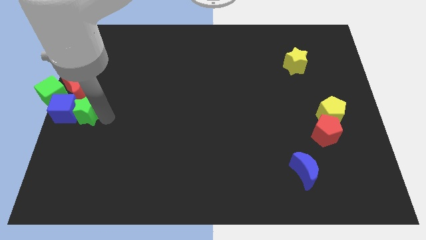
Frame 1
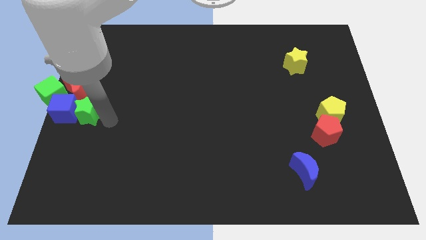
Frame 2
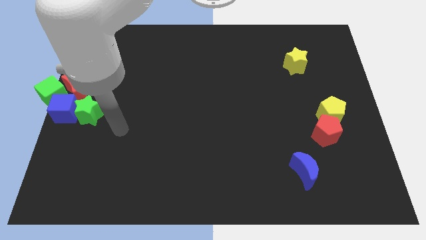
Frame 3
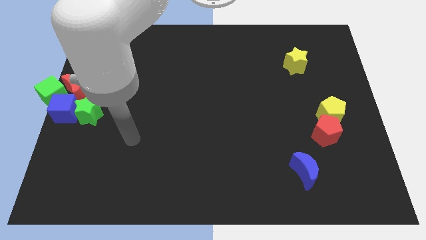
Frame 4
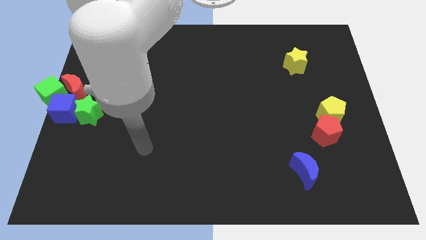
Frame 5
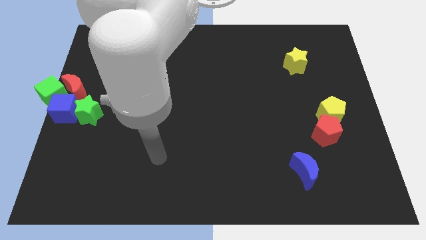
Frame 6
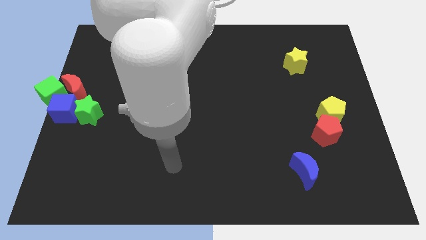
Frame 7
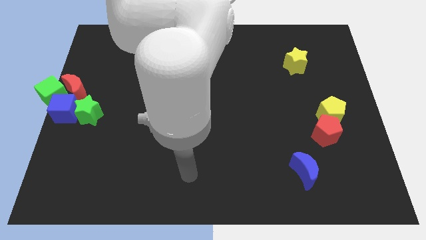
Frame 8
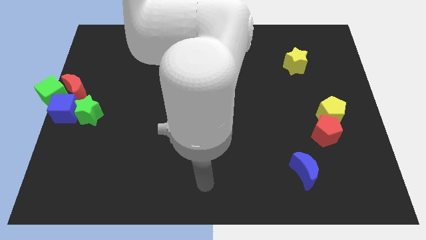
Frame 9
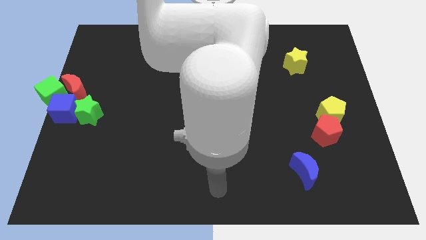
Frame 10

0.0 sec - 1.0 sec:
place the arm to the bottom middle of the board

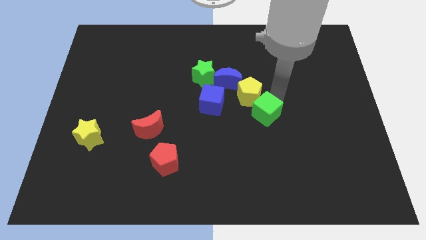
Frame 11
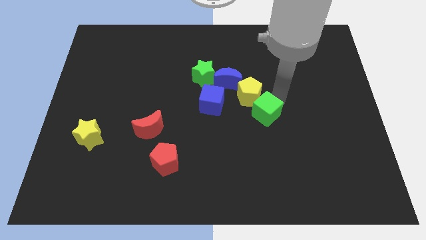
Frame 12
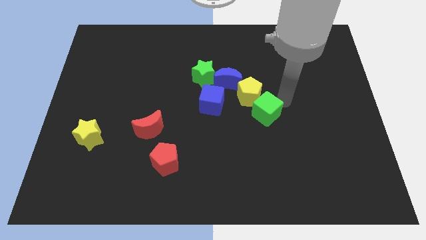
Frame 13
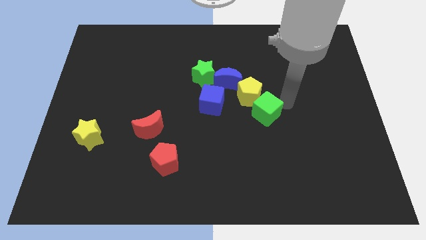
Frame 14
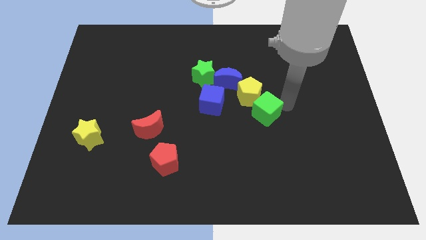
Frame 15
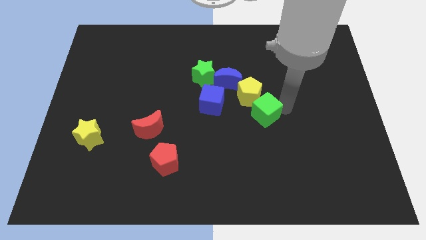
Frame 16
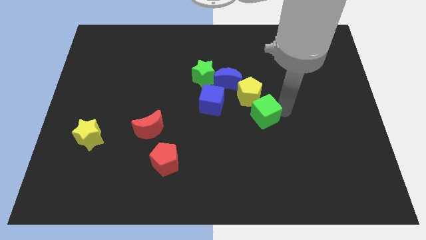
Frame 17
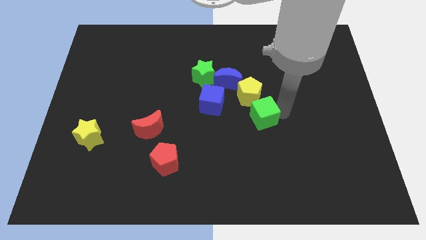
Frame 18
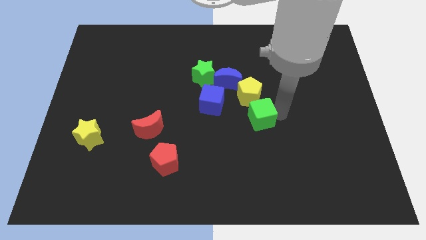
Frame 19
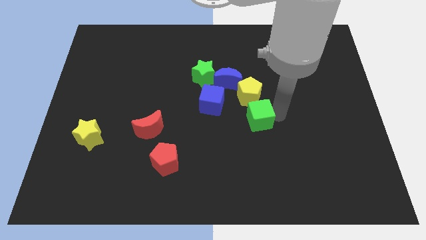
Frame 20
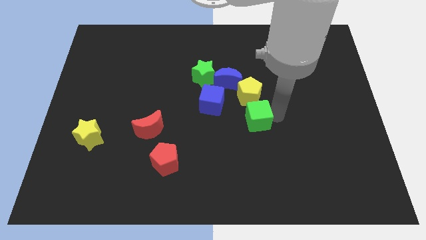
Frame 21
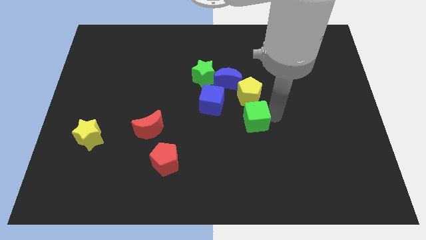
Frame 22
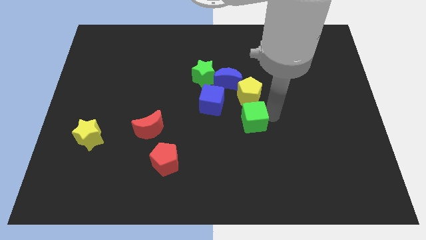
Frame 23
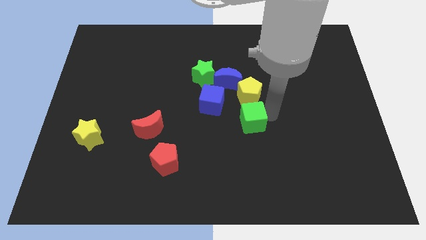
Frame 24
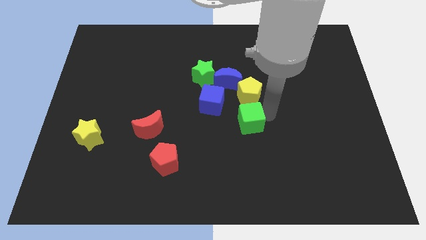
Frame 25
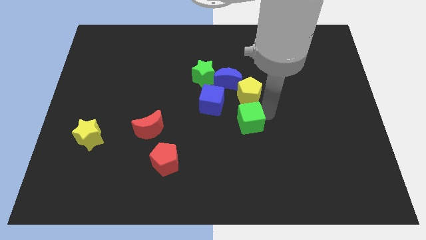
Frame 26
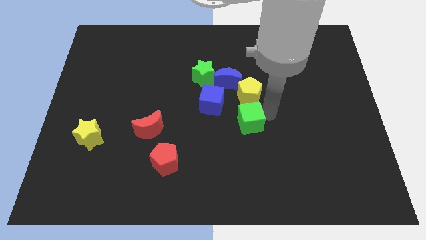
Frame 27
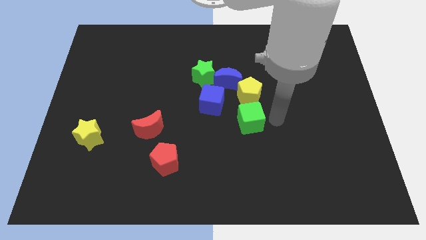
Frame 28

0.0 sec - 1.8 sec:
move the green cube to the bottom of the yellow pentagon

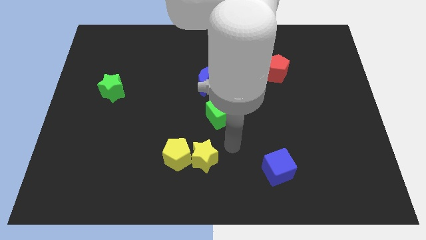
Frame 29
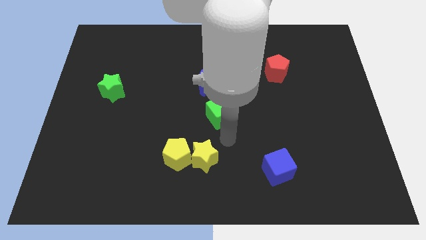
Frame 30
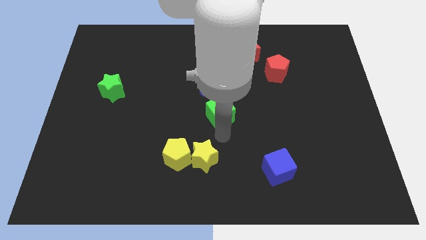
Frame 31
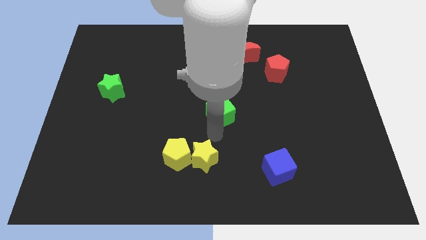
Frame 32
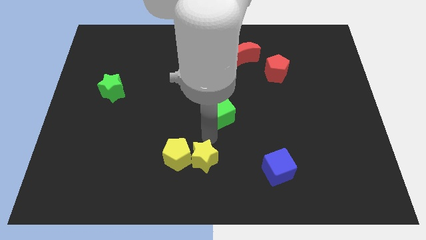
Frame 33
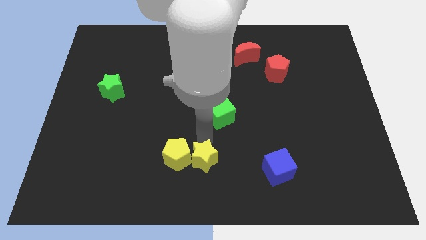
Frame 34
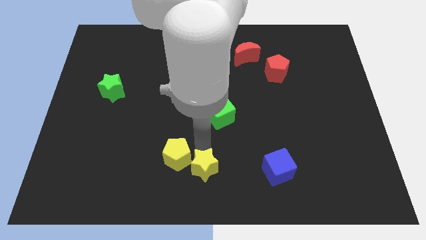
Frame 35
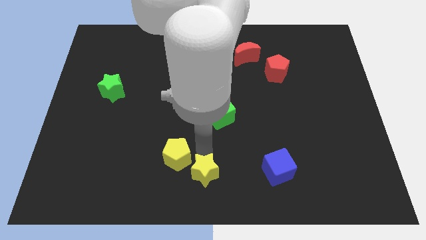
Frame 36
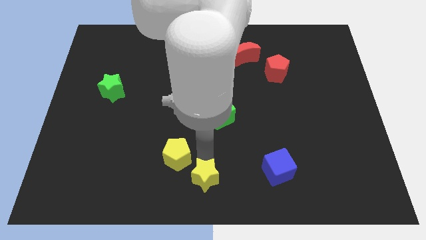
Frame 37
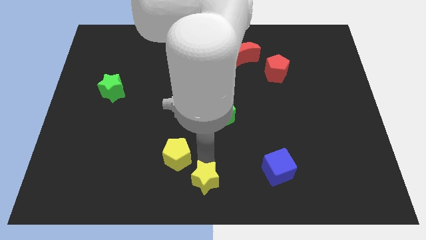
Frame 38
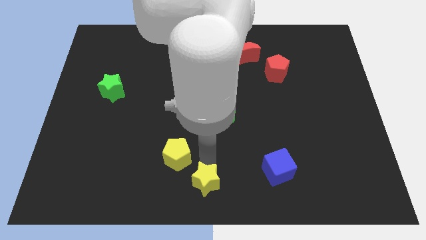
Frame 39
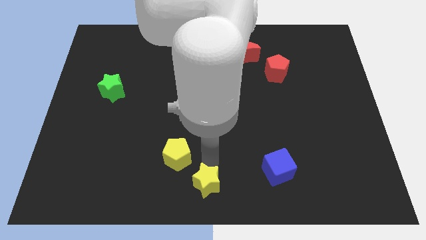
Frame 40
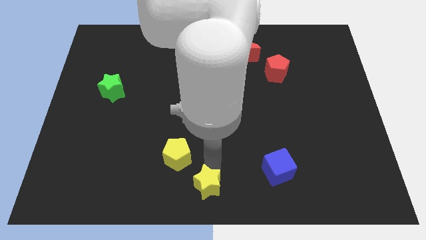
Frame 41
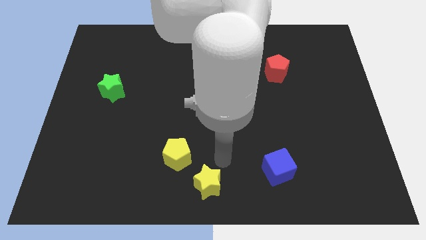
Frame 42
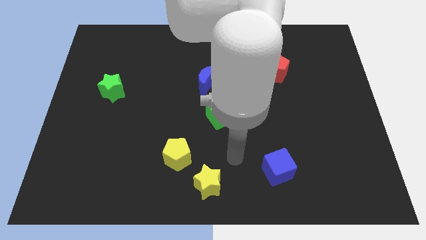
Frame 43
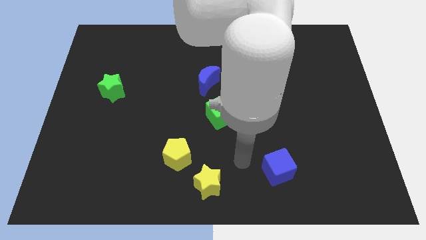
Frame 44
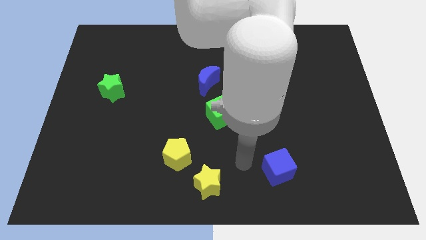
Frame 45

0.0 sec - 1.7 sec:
separate the yellow star from the yellow pentagon

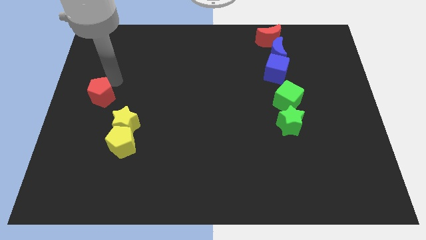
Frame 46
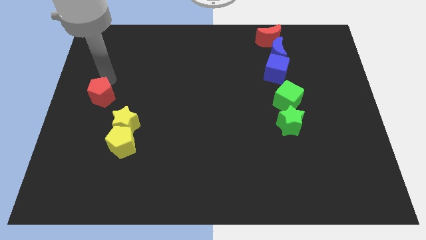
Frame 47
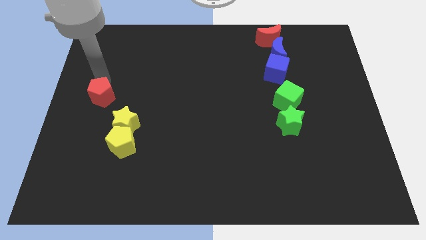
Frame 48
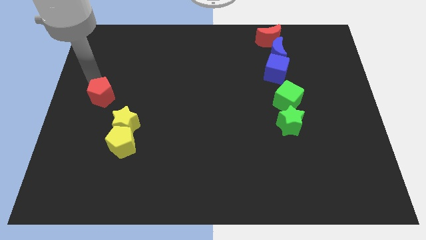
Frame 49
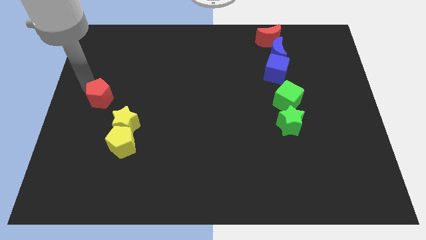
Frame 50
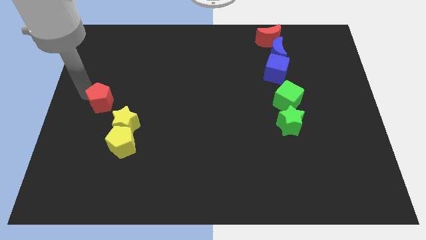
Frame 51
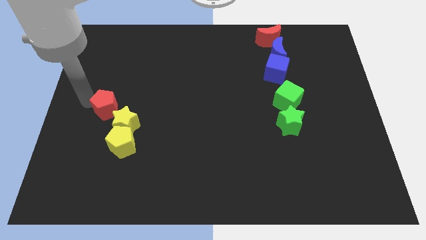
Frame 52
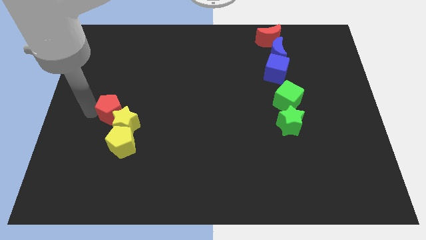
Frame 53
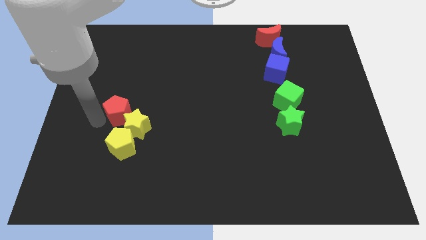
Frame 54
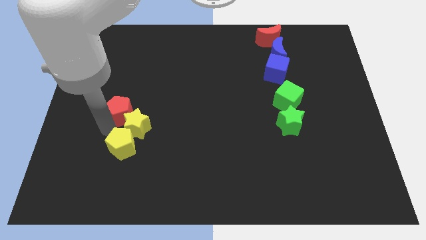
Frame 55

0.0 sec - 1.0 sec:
push the red pentagon into yellow star

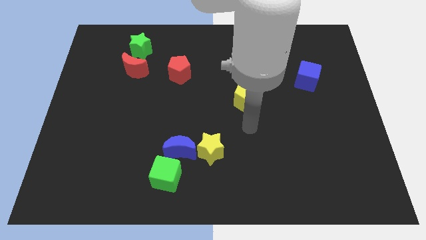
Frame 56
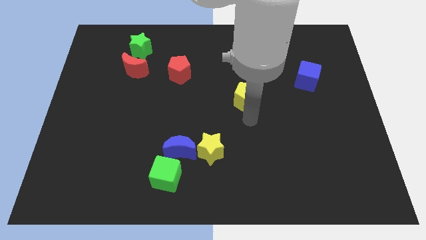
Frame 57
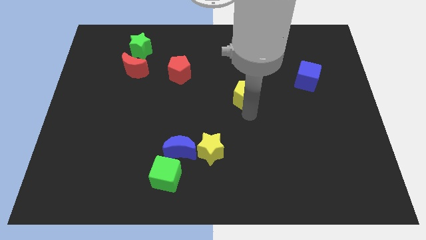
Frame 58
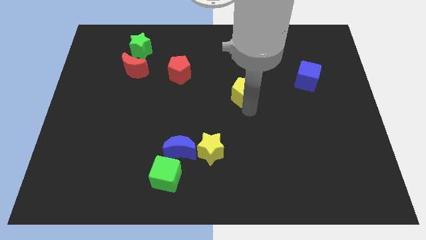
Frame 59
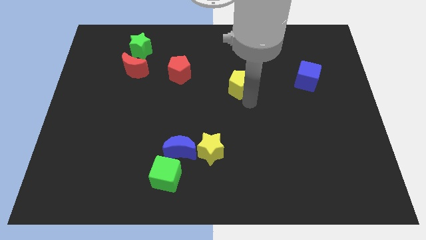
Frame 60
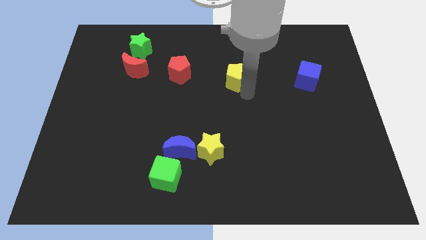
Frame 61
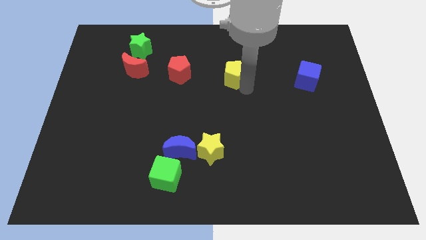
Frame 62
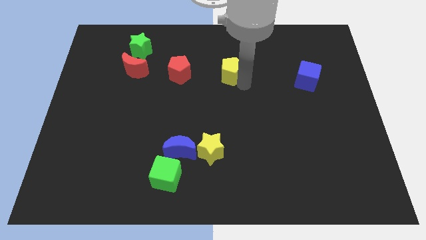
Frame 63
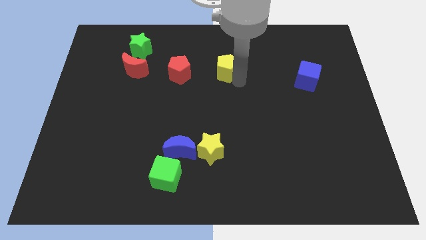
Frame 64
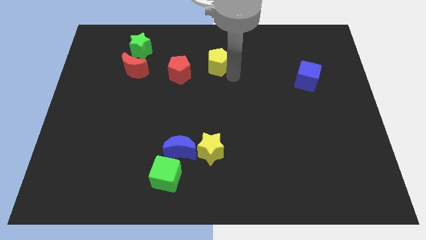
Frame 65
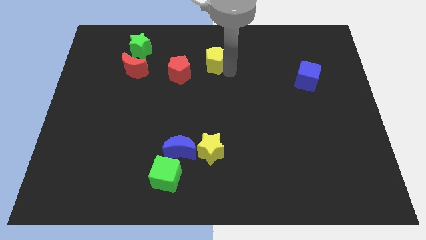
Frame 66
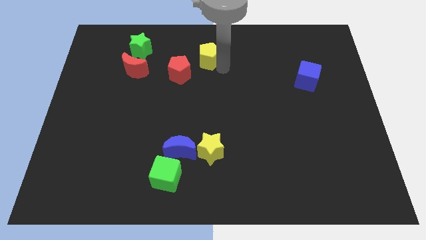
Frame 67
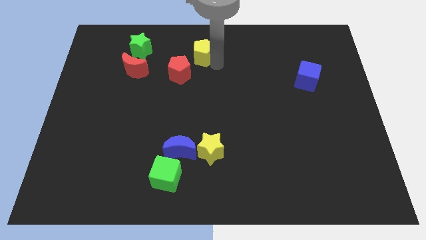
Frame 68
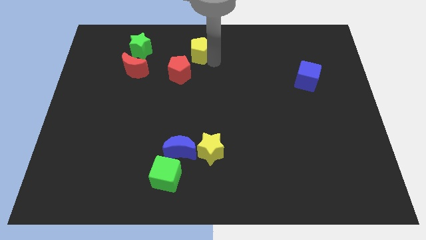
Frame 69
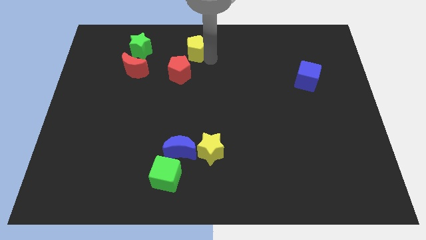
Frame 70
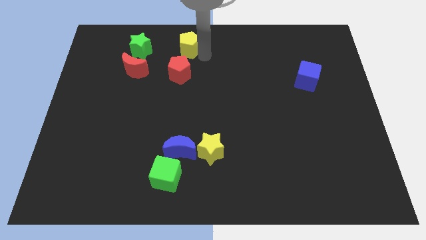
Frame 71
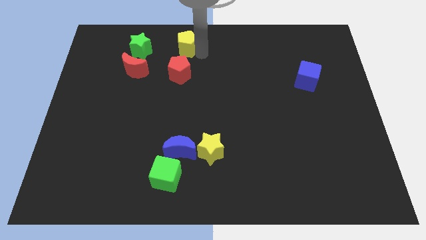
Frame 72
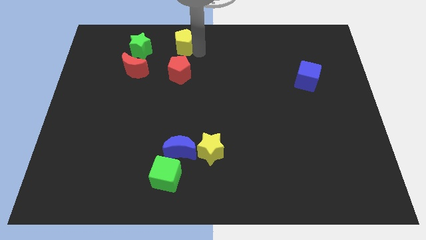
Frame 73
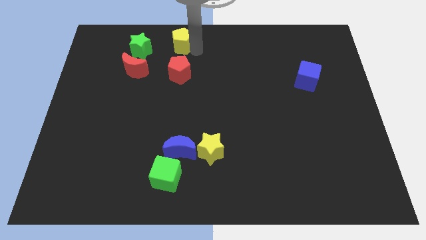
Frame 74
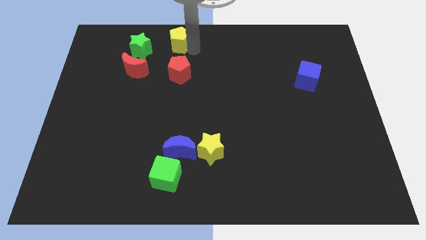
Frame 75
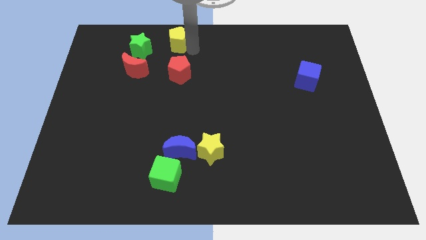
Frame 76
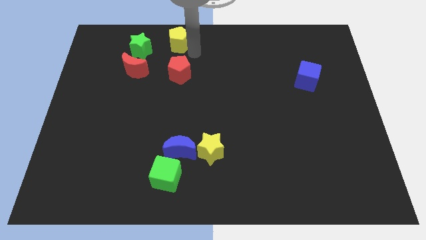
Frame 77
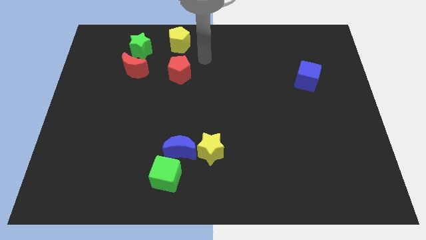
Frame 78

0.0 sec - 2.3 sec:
move the yellow pentagon to the top of the red pentagon

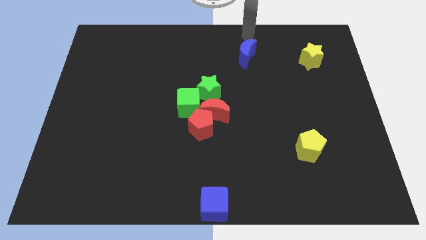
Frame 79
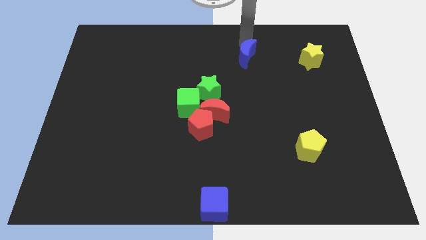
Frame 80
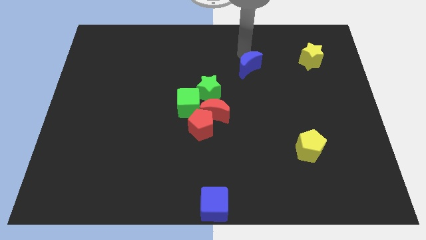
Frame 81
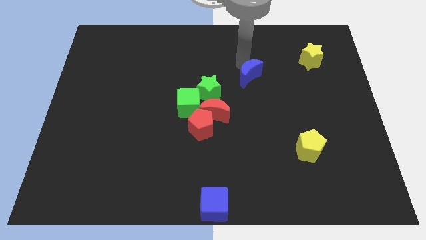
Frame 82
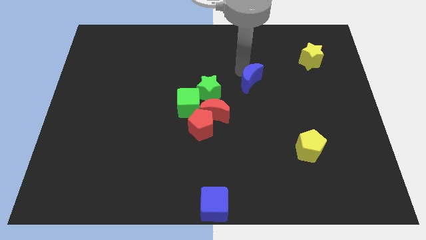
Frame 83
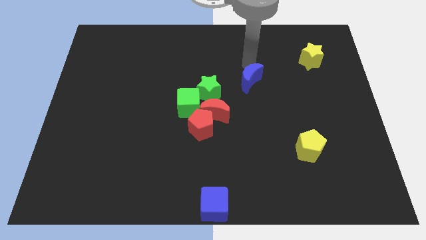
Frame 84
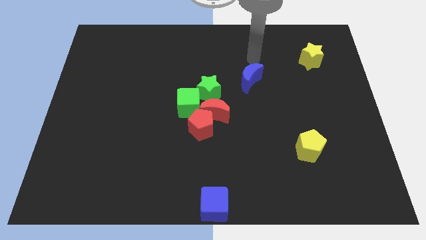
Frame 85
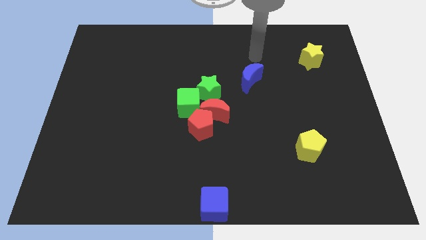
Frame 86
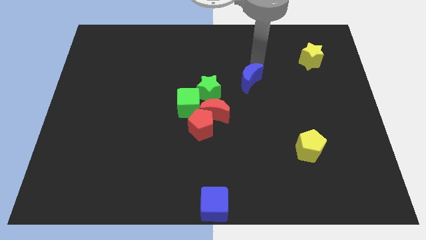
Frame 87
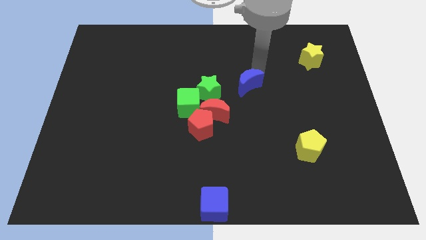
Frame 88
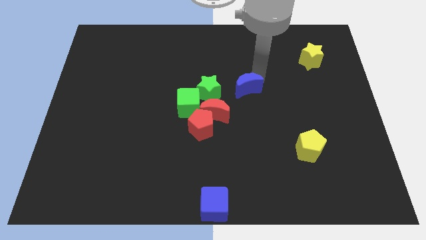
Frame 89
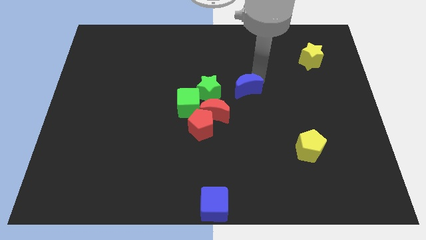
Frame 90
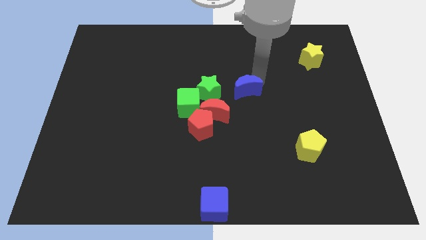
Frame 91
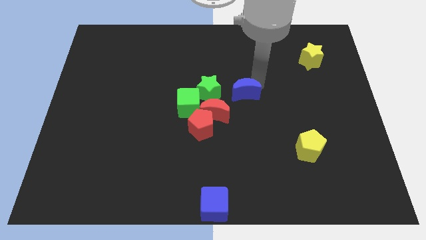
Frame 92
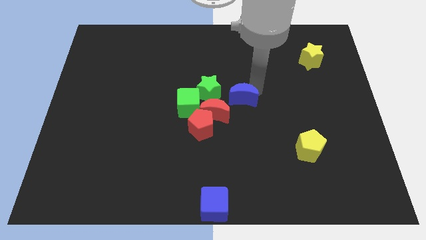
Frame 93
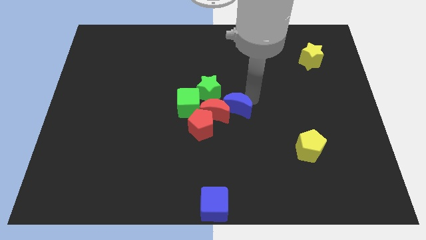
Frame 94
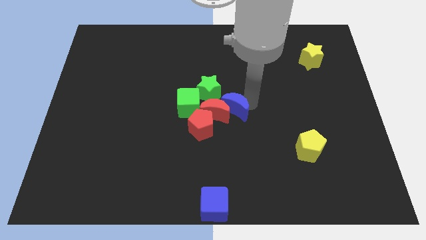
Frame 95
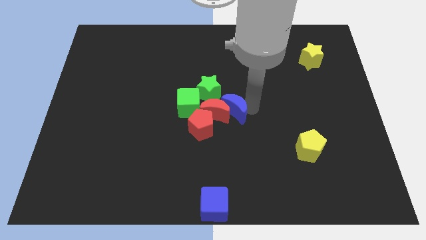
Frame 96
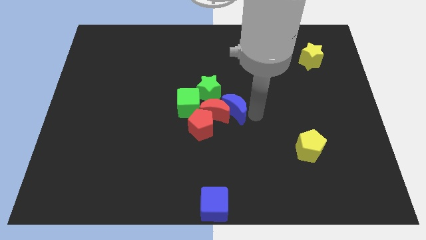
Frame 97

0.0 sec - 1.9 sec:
put the blue crescent and red crescent together
